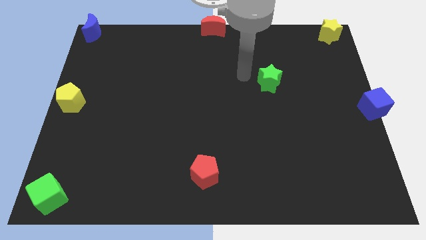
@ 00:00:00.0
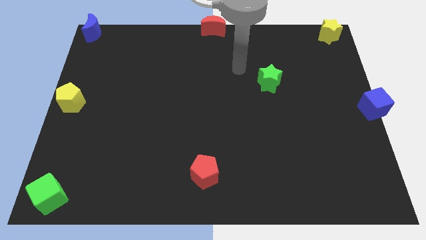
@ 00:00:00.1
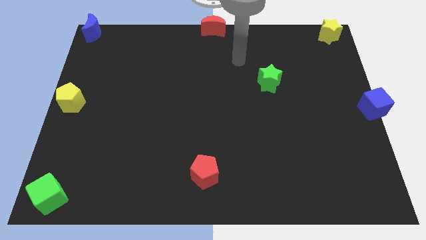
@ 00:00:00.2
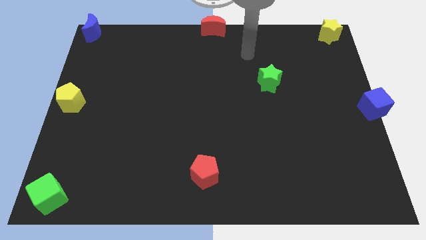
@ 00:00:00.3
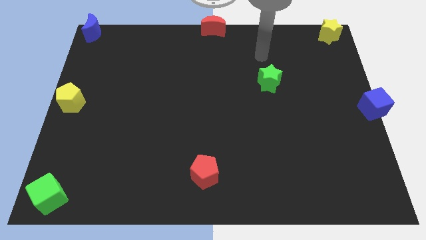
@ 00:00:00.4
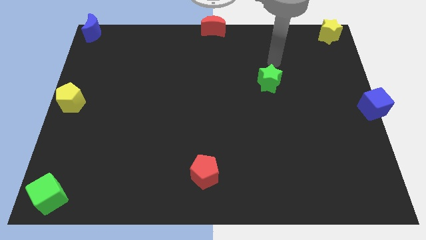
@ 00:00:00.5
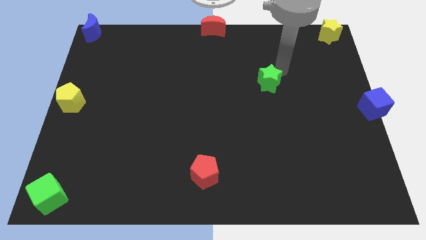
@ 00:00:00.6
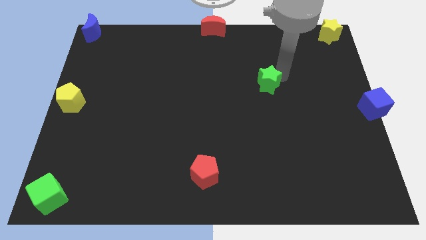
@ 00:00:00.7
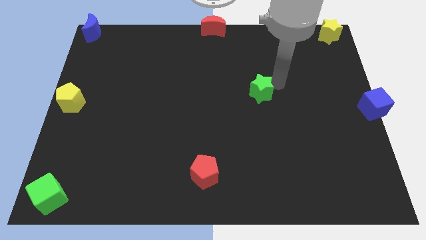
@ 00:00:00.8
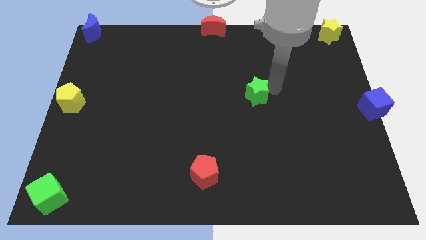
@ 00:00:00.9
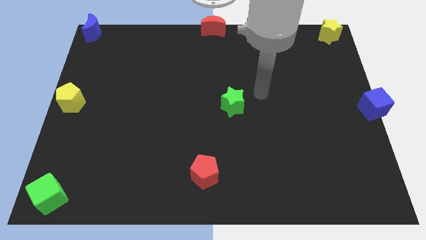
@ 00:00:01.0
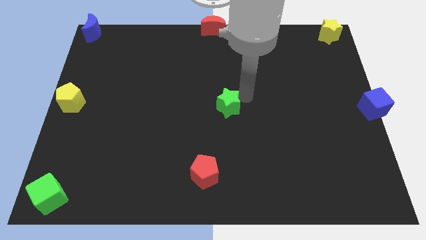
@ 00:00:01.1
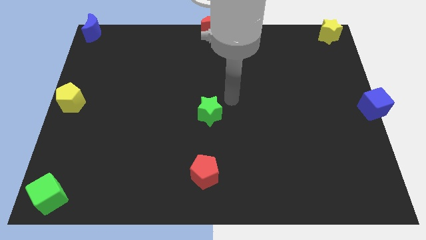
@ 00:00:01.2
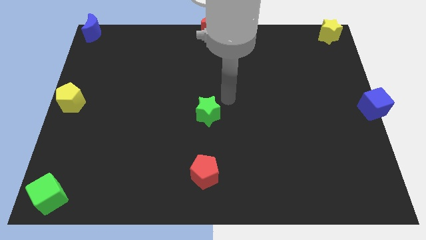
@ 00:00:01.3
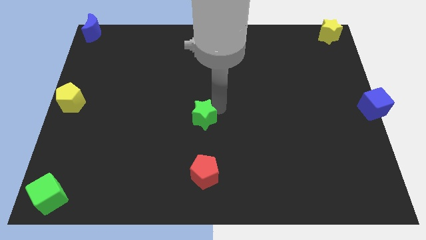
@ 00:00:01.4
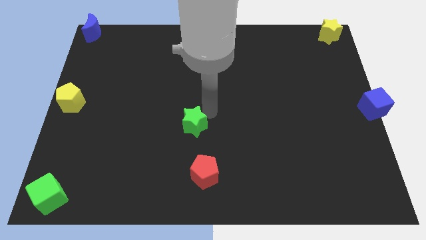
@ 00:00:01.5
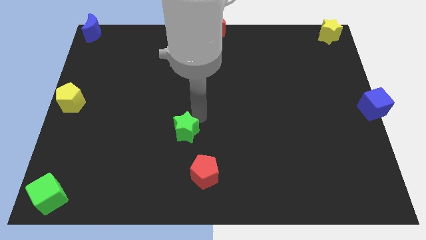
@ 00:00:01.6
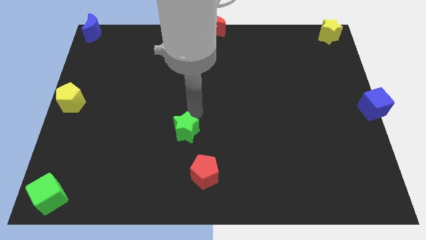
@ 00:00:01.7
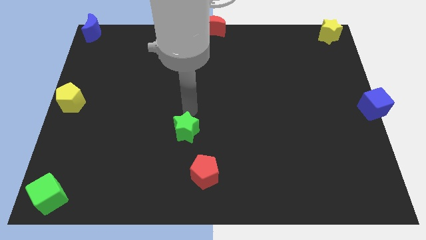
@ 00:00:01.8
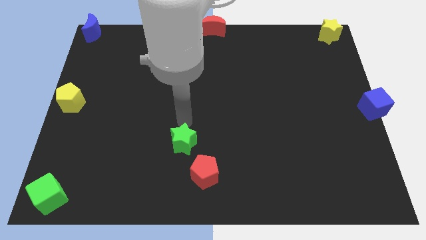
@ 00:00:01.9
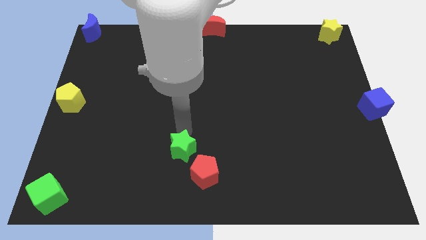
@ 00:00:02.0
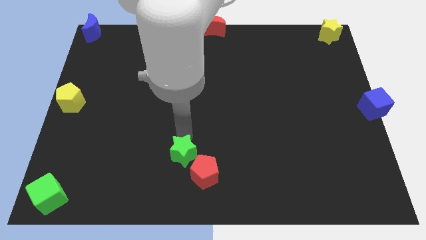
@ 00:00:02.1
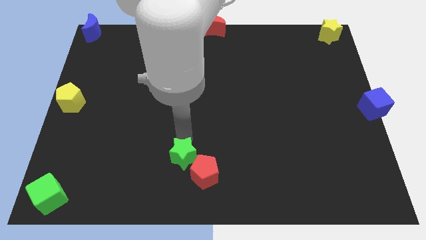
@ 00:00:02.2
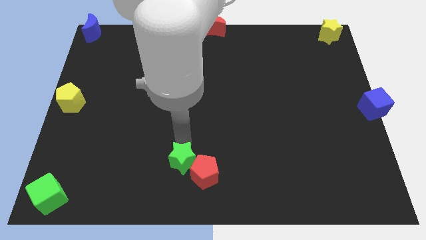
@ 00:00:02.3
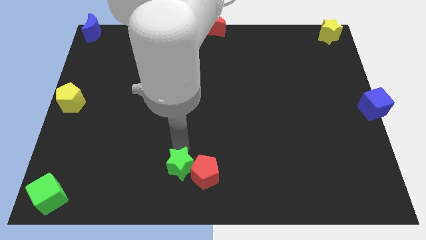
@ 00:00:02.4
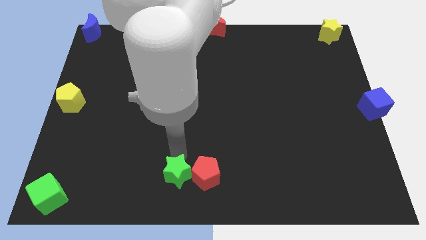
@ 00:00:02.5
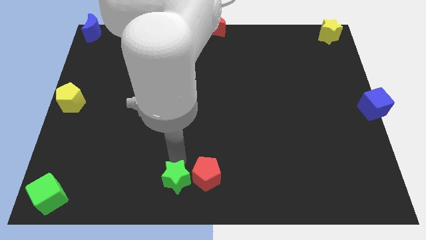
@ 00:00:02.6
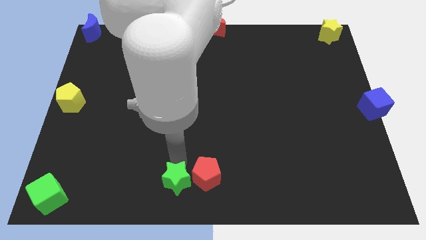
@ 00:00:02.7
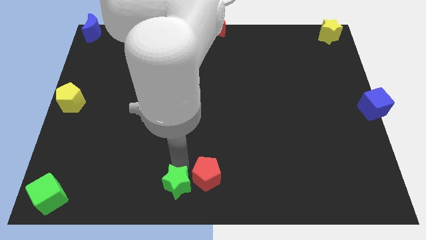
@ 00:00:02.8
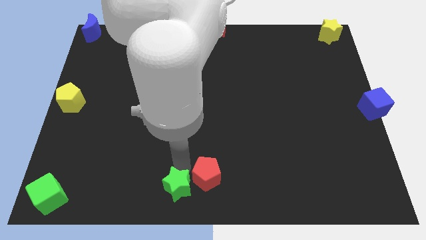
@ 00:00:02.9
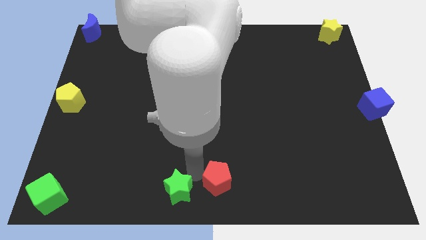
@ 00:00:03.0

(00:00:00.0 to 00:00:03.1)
place green star to the left of red pentagon

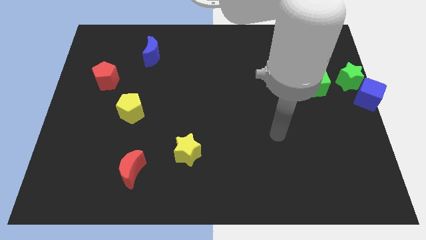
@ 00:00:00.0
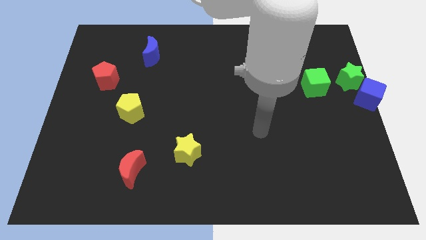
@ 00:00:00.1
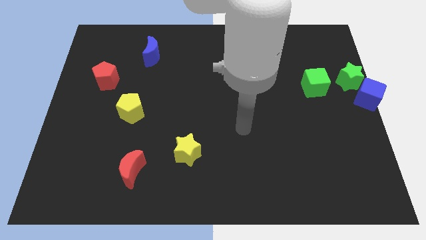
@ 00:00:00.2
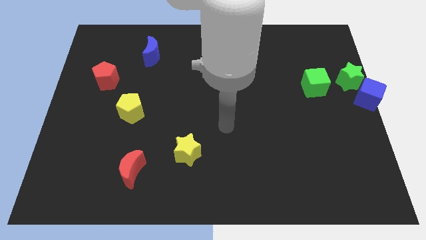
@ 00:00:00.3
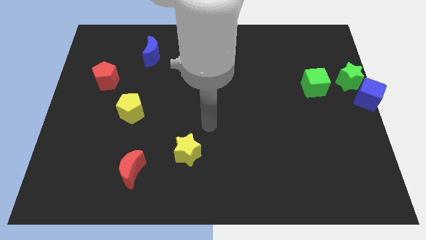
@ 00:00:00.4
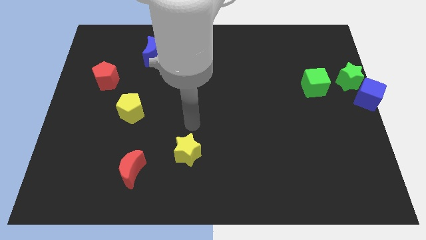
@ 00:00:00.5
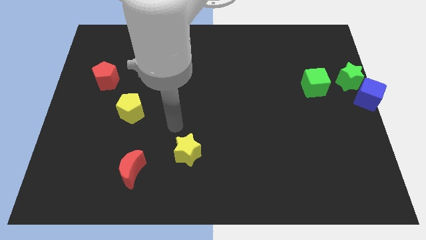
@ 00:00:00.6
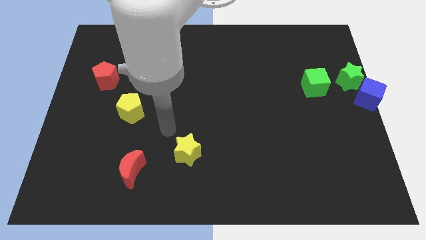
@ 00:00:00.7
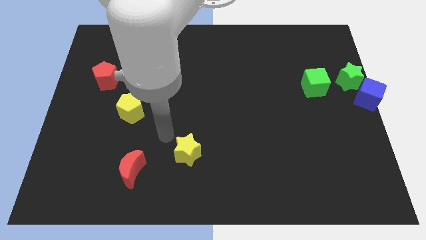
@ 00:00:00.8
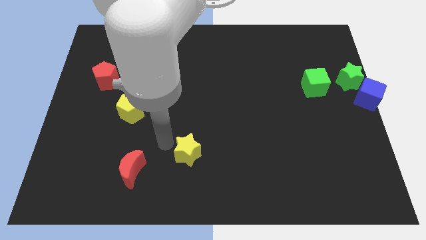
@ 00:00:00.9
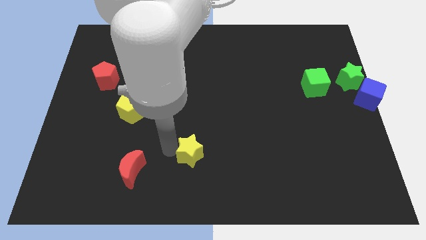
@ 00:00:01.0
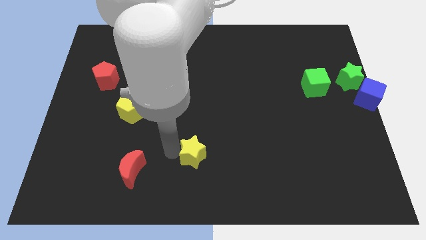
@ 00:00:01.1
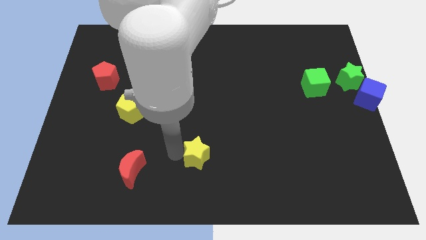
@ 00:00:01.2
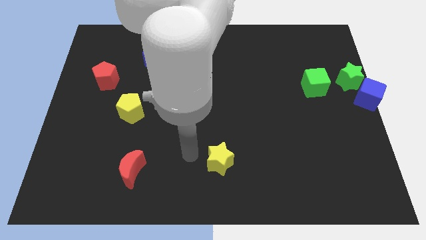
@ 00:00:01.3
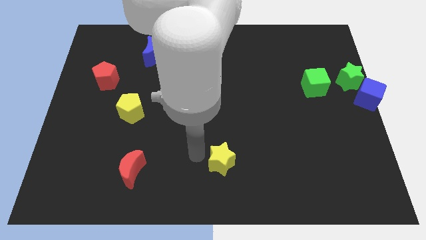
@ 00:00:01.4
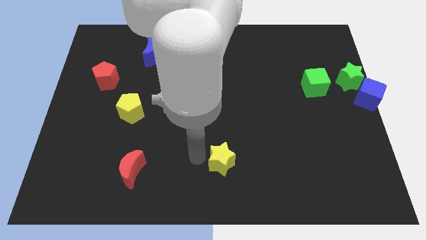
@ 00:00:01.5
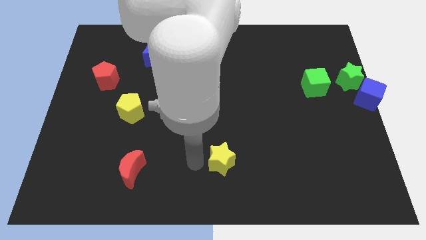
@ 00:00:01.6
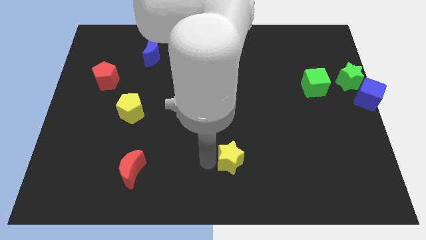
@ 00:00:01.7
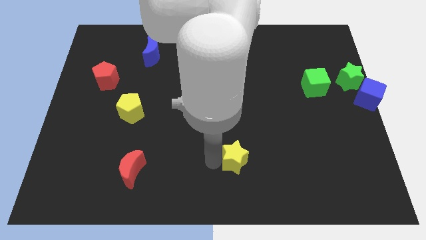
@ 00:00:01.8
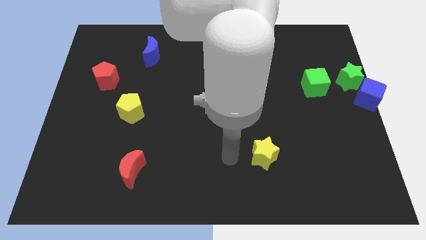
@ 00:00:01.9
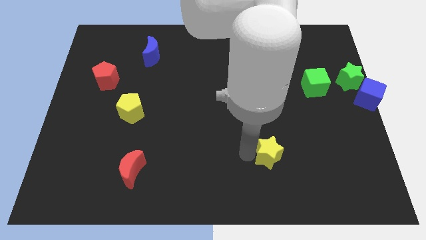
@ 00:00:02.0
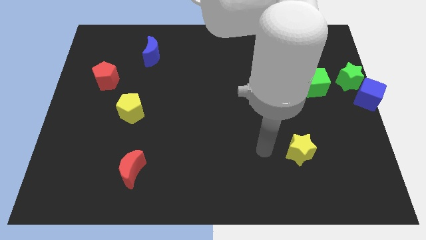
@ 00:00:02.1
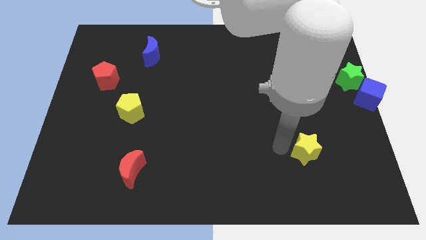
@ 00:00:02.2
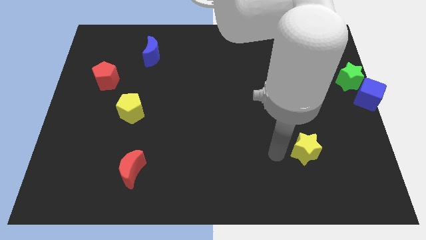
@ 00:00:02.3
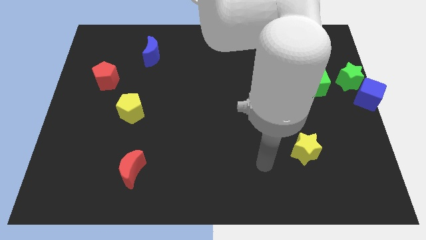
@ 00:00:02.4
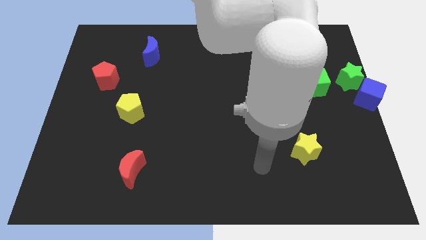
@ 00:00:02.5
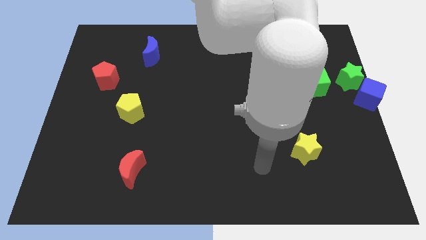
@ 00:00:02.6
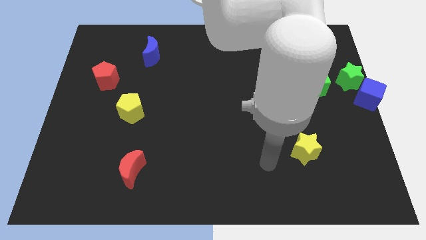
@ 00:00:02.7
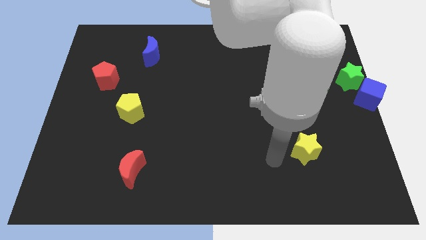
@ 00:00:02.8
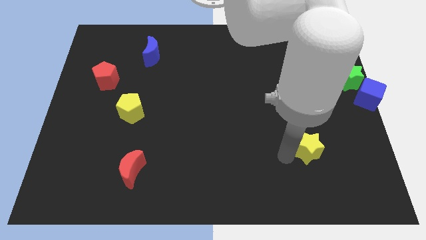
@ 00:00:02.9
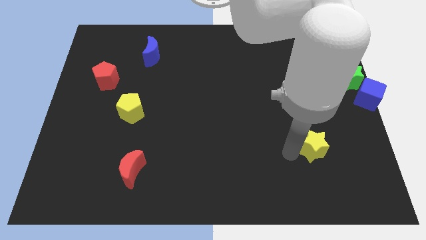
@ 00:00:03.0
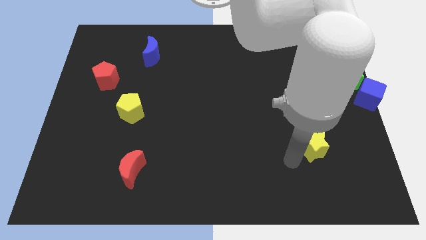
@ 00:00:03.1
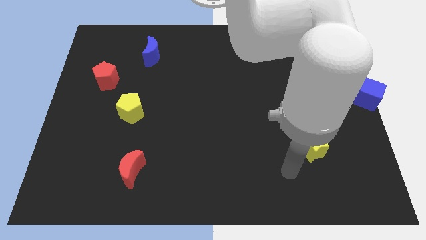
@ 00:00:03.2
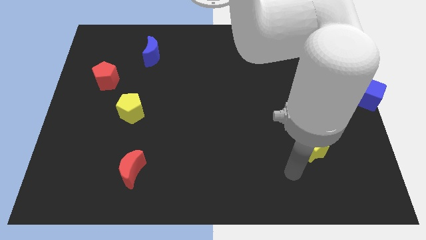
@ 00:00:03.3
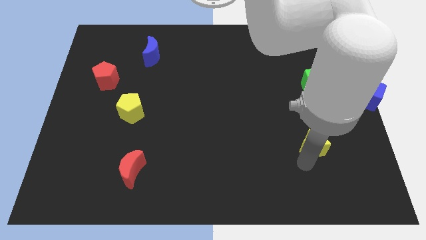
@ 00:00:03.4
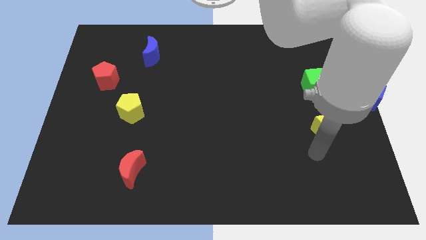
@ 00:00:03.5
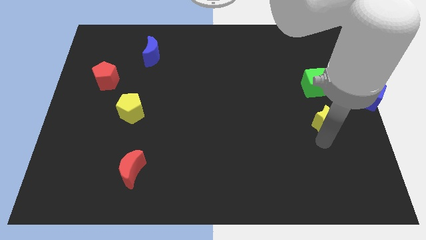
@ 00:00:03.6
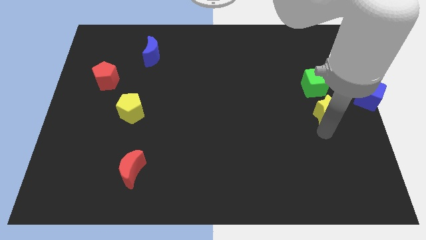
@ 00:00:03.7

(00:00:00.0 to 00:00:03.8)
push the yellow star below the green cube

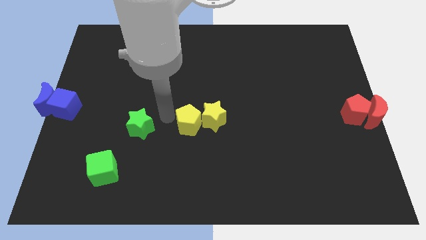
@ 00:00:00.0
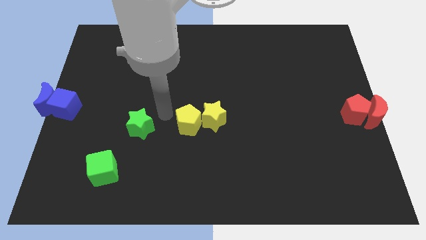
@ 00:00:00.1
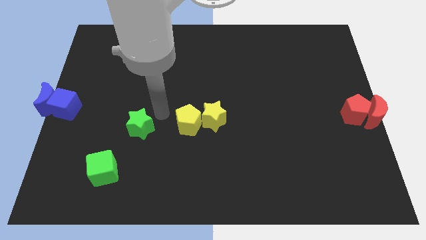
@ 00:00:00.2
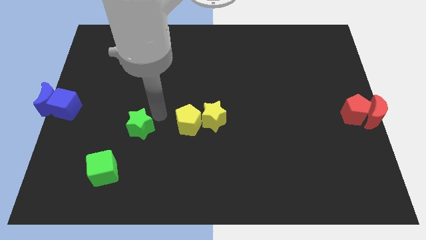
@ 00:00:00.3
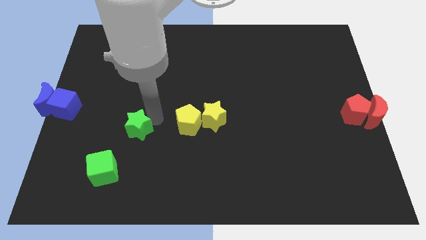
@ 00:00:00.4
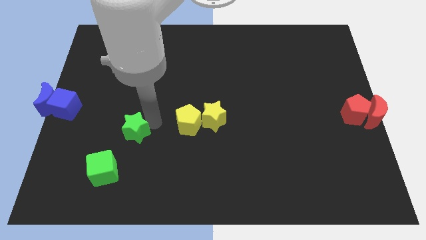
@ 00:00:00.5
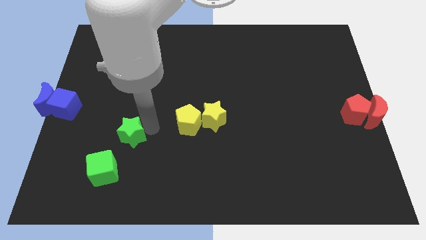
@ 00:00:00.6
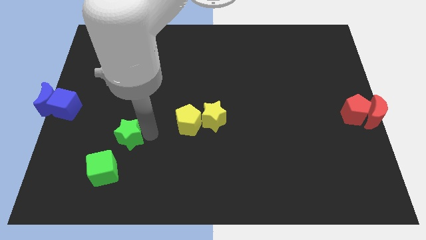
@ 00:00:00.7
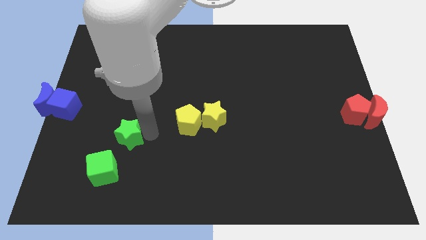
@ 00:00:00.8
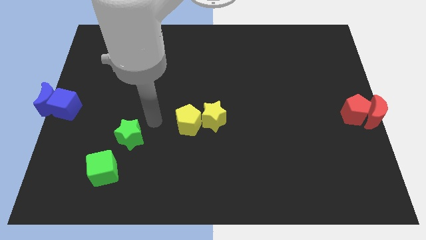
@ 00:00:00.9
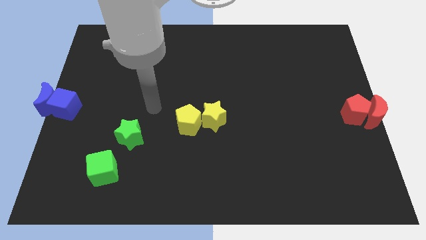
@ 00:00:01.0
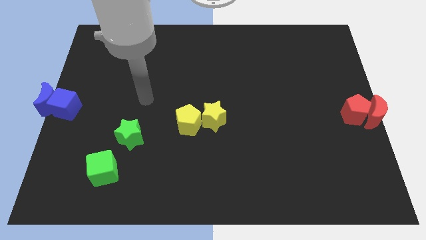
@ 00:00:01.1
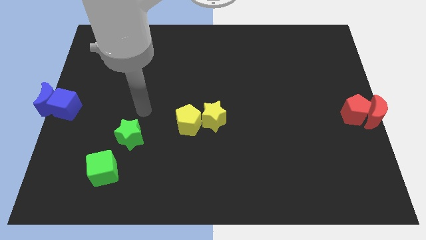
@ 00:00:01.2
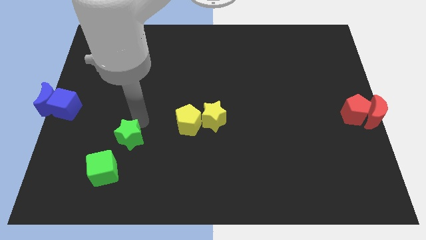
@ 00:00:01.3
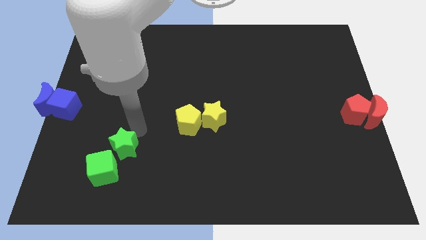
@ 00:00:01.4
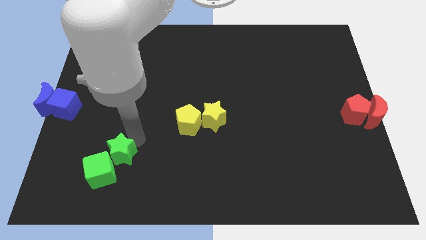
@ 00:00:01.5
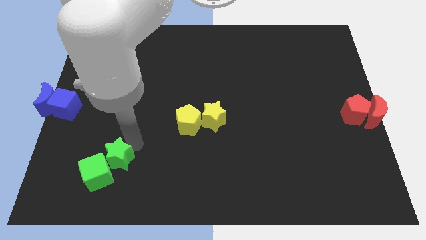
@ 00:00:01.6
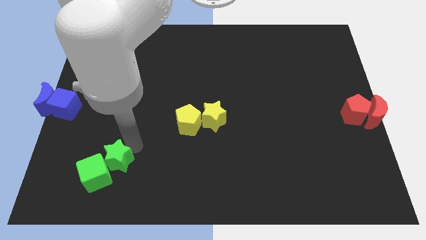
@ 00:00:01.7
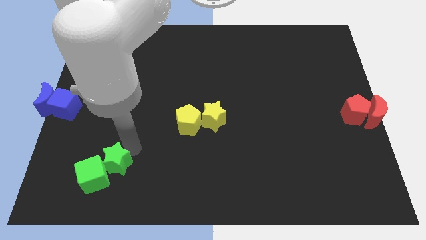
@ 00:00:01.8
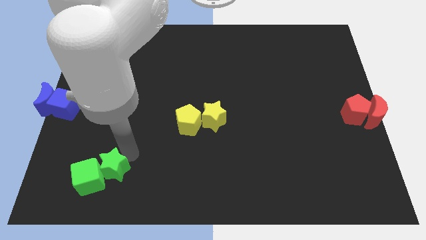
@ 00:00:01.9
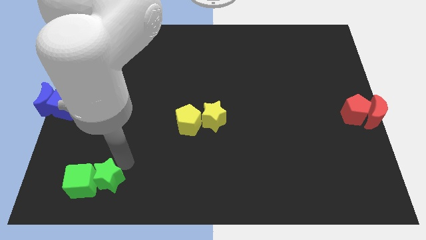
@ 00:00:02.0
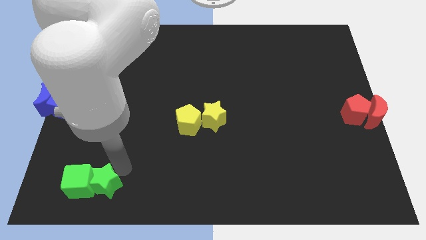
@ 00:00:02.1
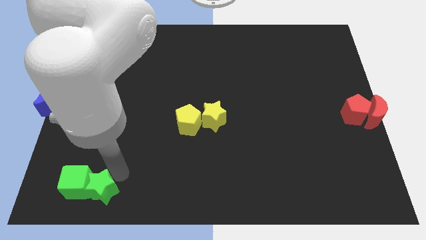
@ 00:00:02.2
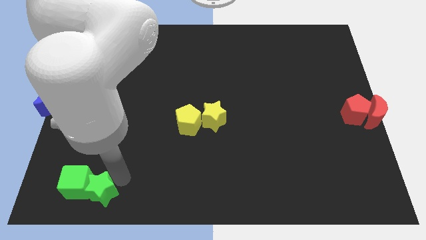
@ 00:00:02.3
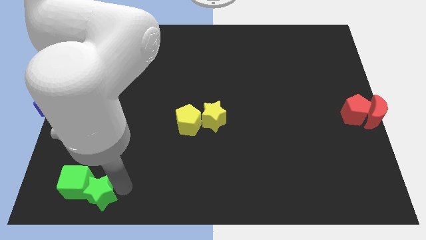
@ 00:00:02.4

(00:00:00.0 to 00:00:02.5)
push the green star into the green cube
